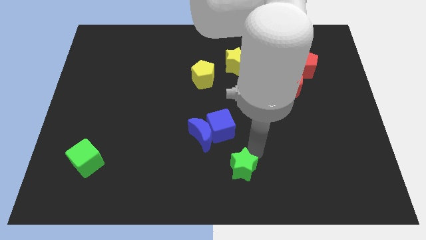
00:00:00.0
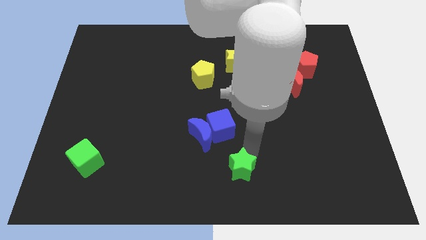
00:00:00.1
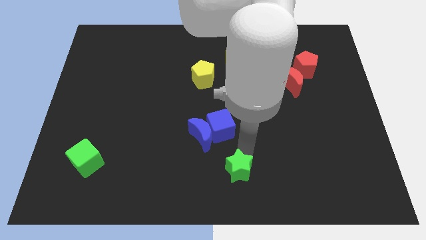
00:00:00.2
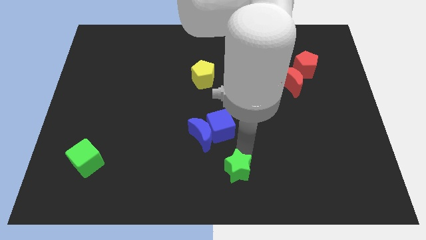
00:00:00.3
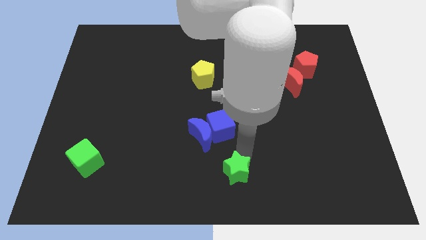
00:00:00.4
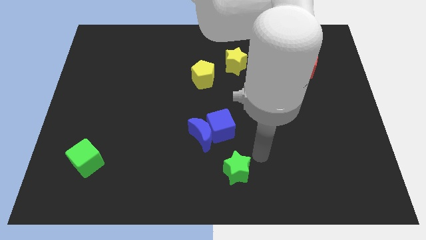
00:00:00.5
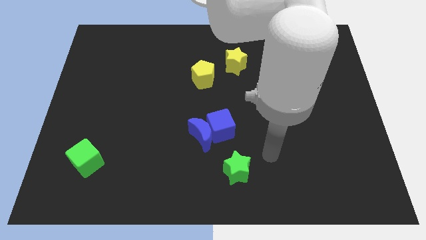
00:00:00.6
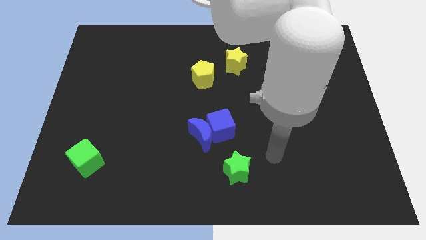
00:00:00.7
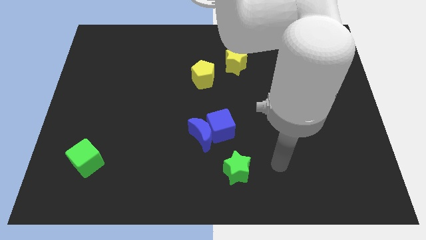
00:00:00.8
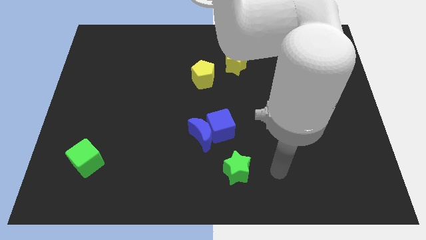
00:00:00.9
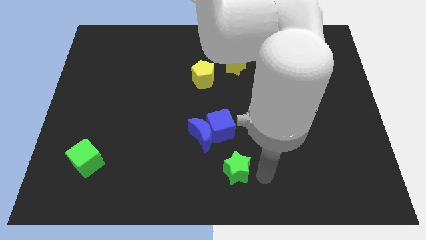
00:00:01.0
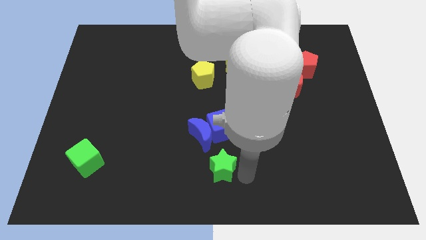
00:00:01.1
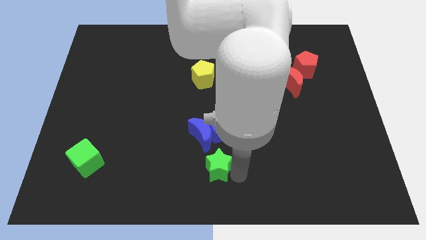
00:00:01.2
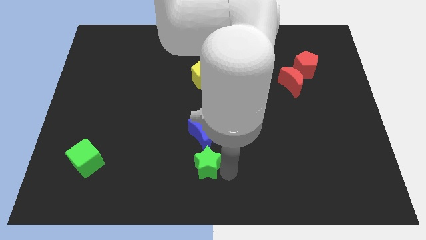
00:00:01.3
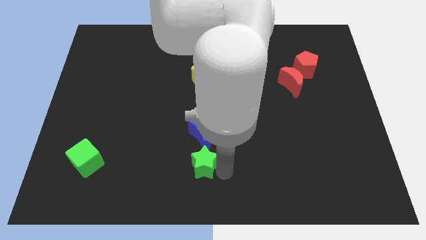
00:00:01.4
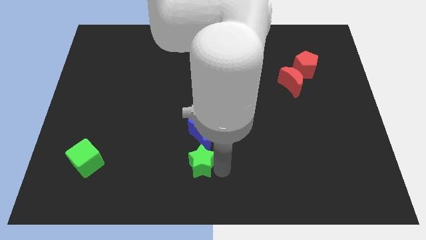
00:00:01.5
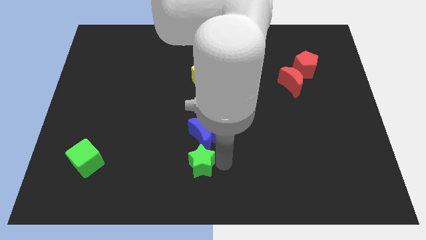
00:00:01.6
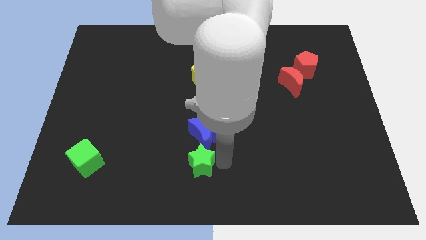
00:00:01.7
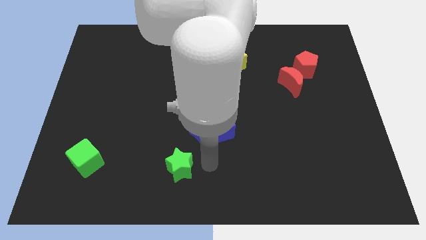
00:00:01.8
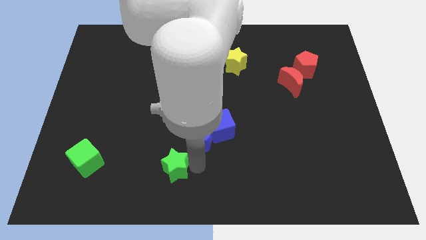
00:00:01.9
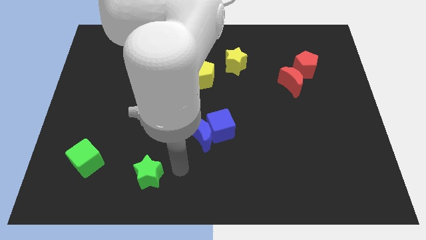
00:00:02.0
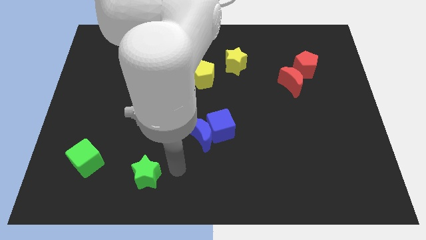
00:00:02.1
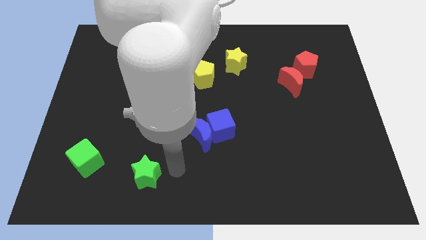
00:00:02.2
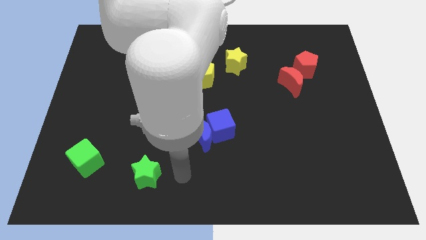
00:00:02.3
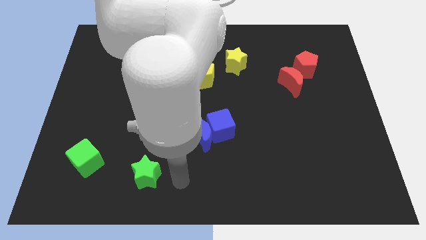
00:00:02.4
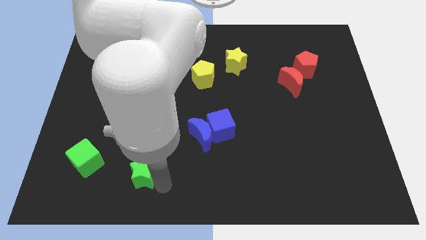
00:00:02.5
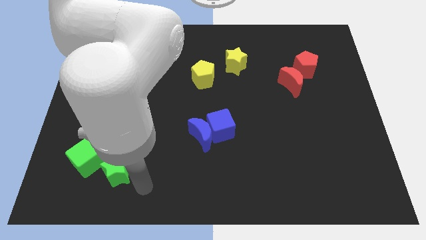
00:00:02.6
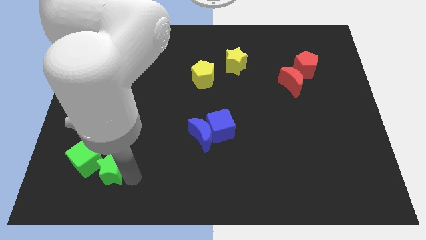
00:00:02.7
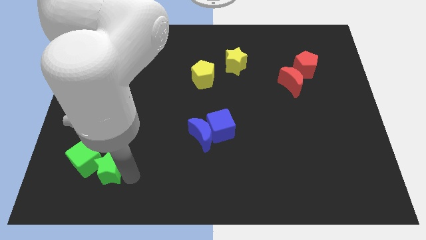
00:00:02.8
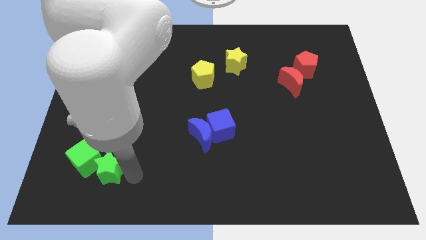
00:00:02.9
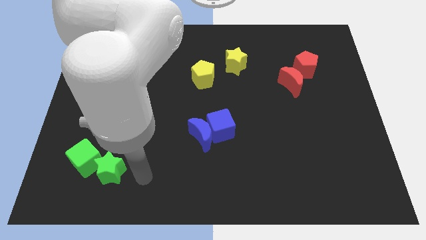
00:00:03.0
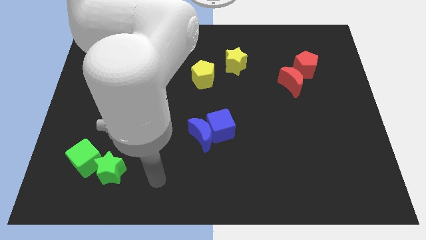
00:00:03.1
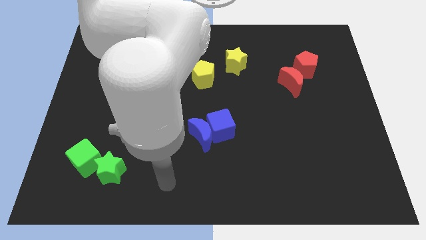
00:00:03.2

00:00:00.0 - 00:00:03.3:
push the green star towards the green cube

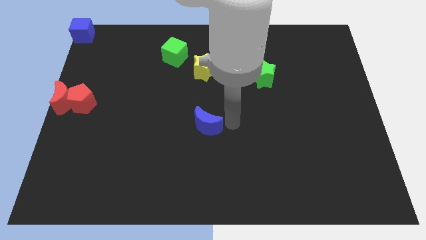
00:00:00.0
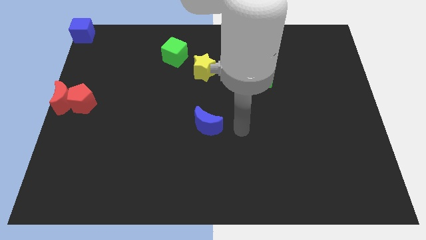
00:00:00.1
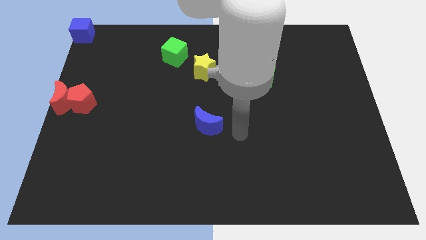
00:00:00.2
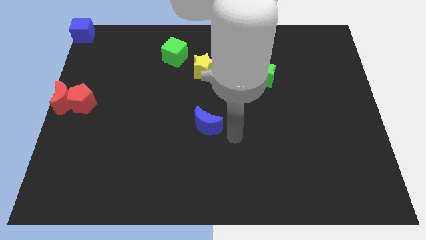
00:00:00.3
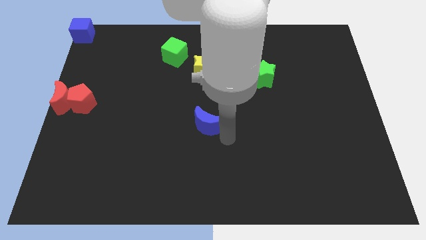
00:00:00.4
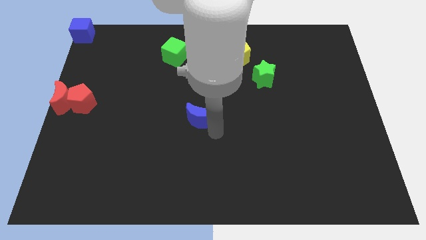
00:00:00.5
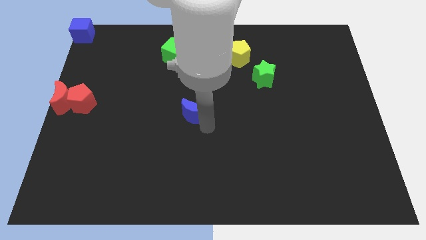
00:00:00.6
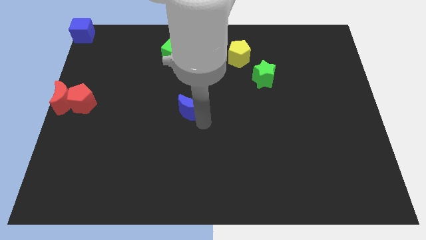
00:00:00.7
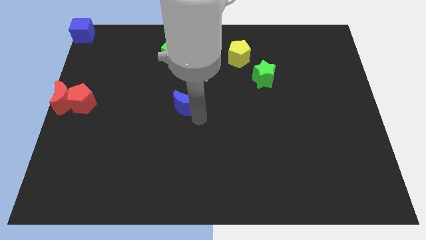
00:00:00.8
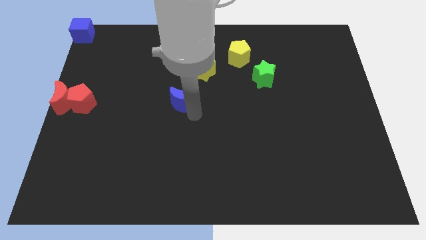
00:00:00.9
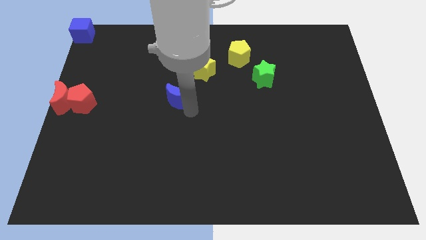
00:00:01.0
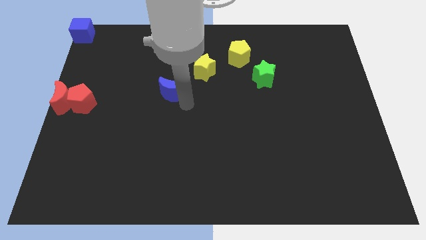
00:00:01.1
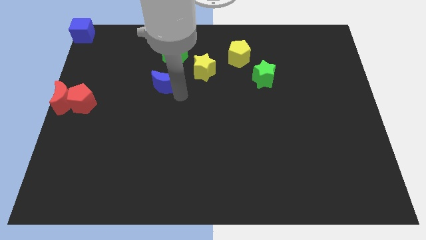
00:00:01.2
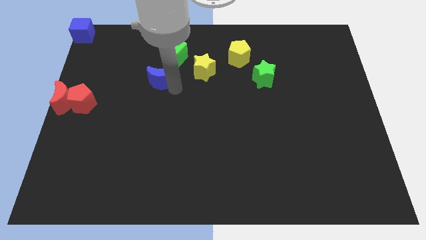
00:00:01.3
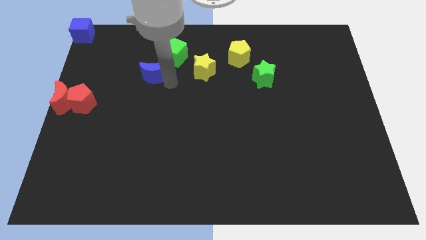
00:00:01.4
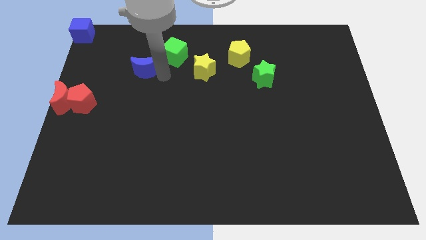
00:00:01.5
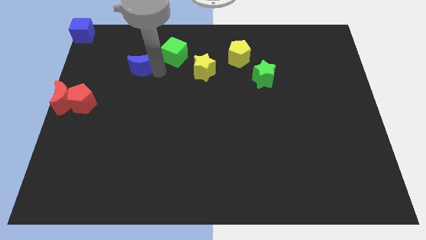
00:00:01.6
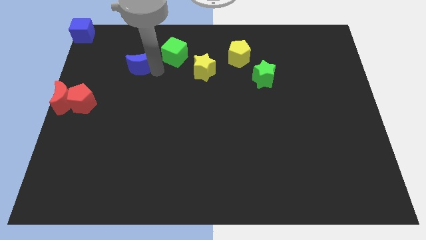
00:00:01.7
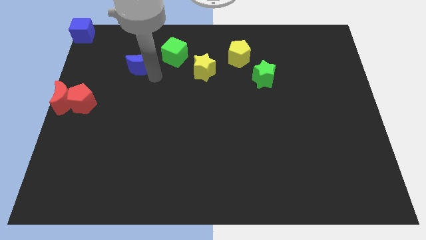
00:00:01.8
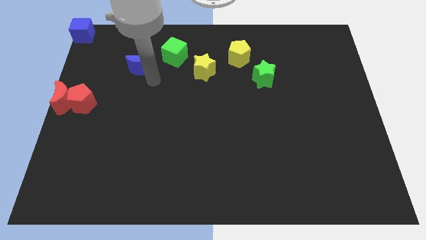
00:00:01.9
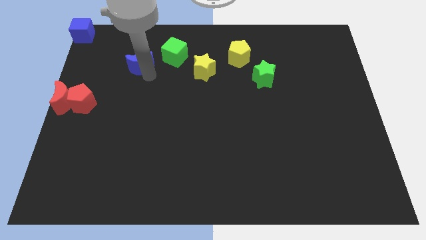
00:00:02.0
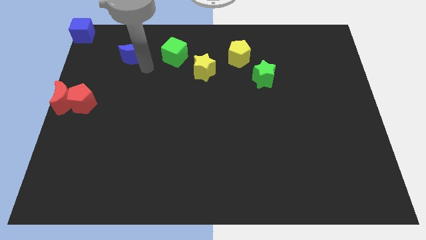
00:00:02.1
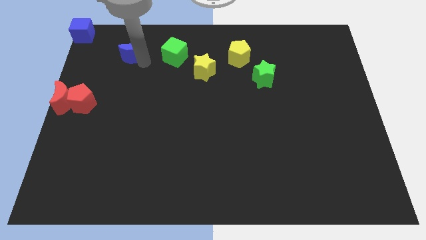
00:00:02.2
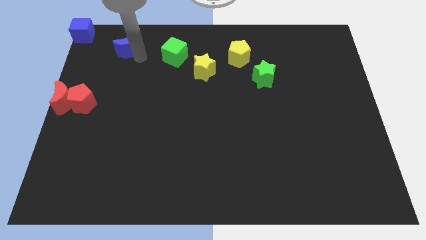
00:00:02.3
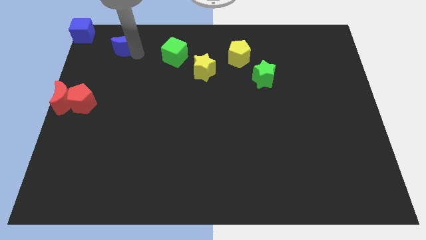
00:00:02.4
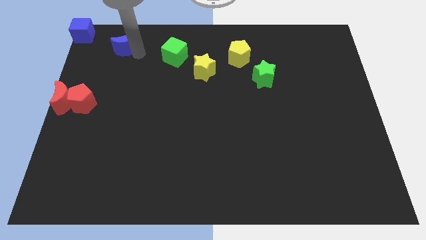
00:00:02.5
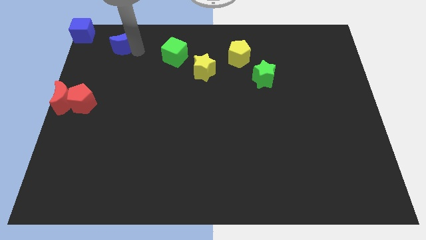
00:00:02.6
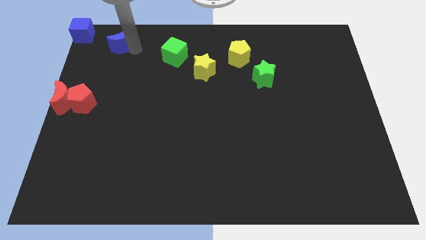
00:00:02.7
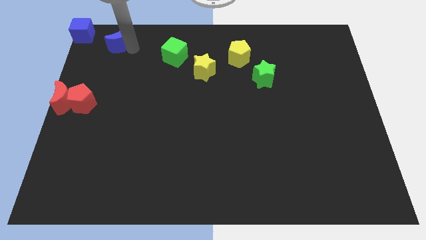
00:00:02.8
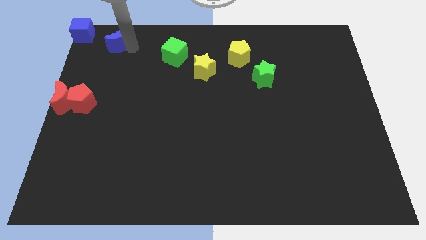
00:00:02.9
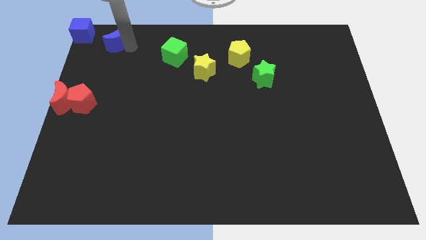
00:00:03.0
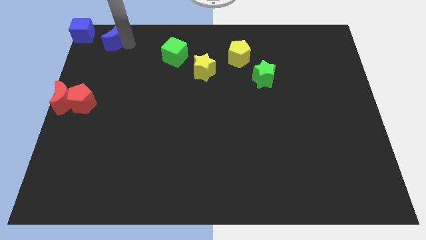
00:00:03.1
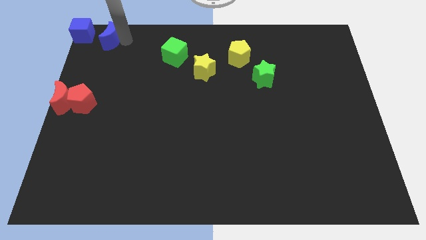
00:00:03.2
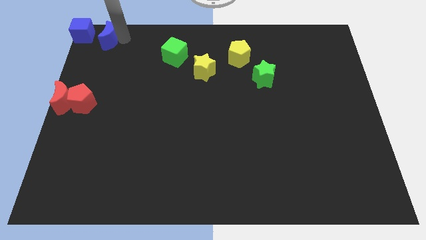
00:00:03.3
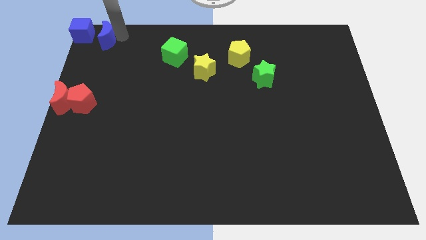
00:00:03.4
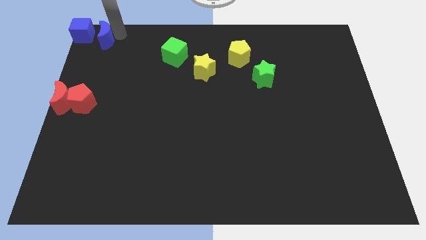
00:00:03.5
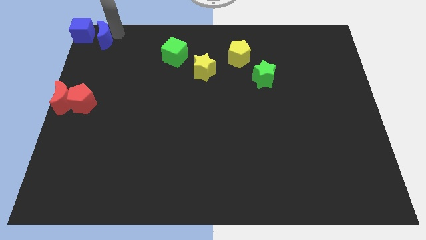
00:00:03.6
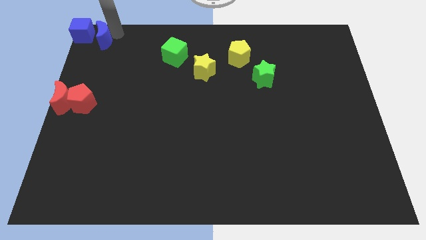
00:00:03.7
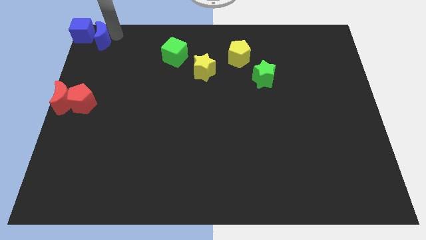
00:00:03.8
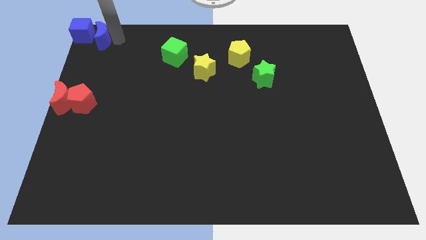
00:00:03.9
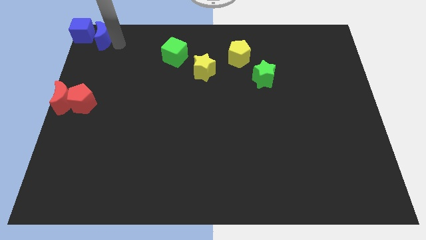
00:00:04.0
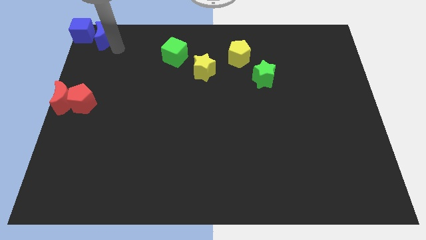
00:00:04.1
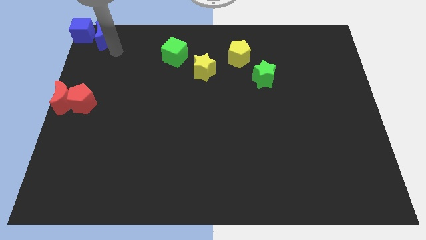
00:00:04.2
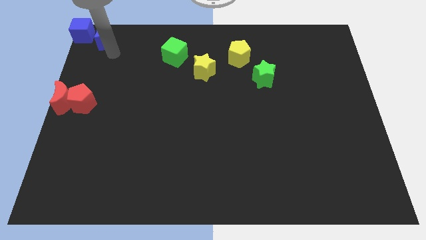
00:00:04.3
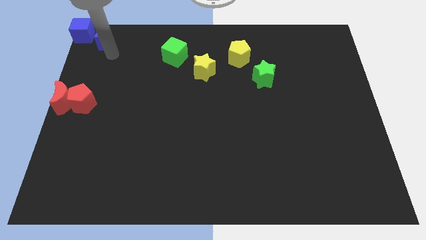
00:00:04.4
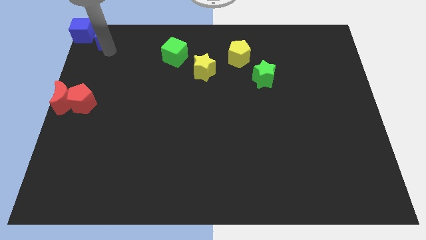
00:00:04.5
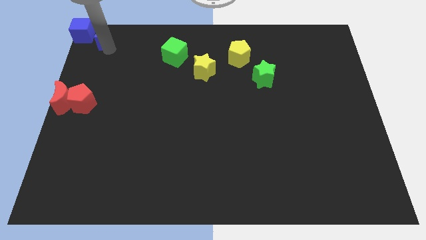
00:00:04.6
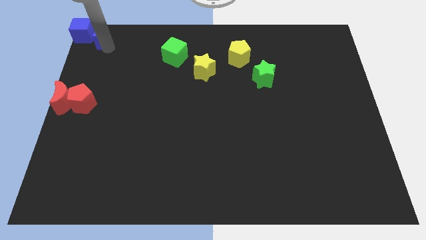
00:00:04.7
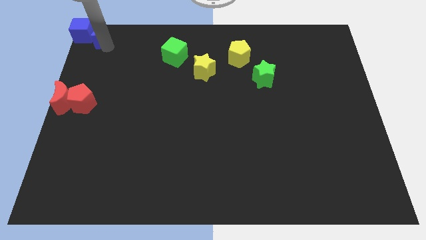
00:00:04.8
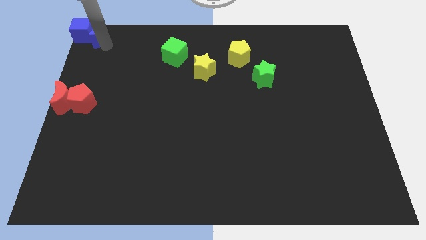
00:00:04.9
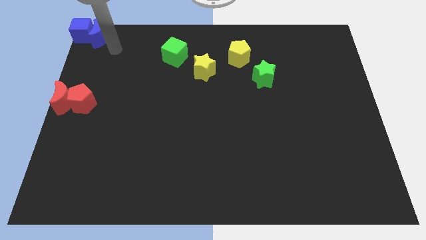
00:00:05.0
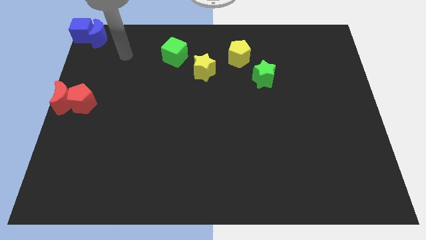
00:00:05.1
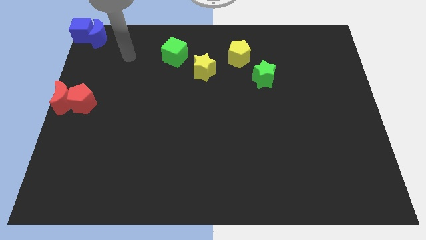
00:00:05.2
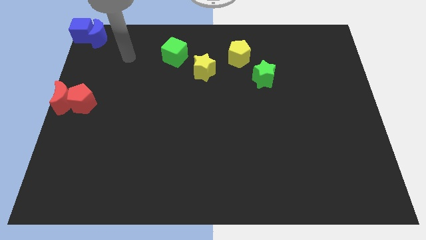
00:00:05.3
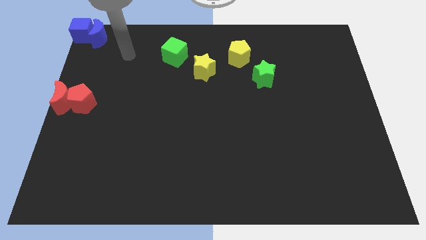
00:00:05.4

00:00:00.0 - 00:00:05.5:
place the blue moon to the right of the blue cube

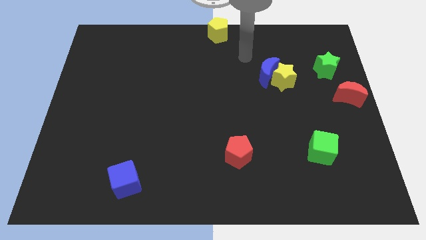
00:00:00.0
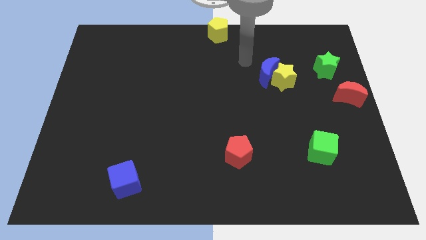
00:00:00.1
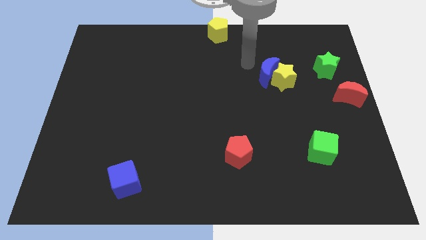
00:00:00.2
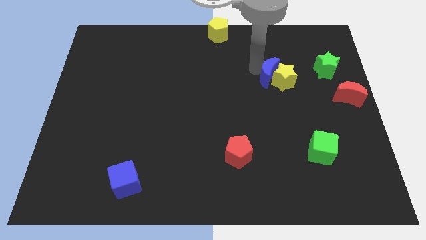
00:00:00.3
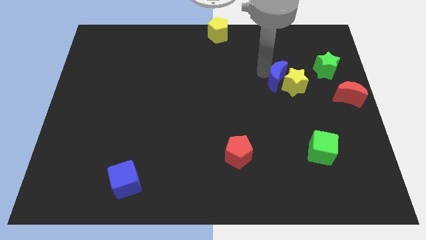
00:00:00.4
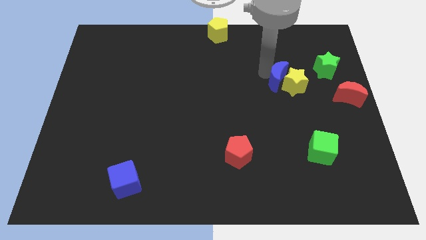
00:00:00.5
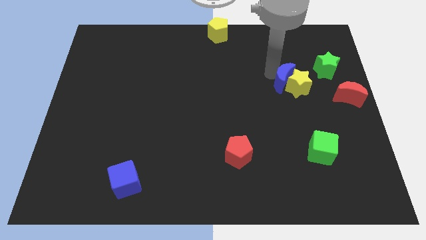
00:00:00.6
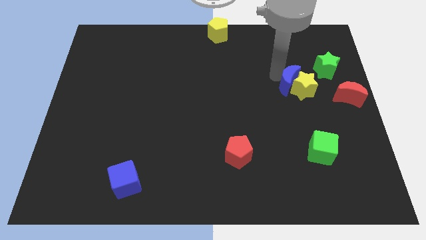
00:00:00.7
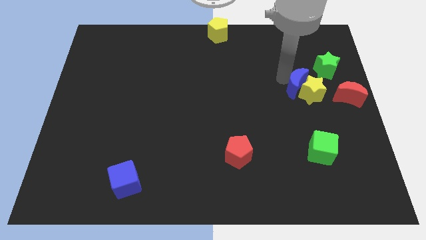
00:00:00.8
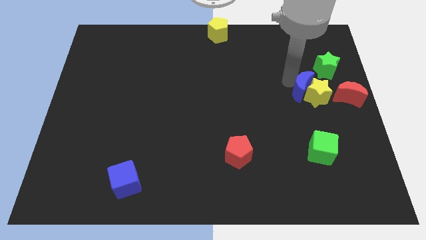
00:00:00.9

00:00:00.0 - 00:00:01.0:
push yellow star and blue moon towards red crescent
